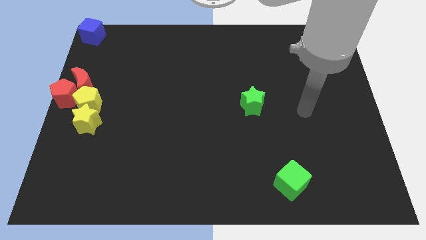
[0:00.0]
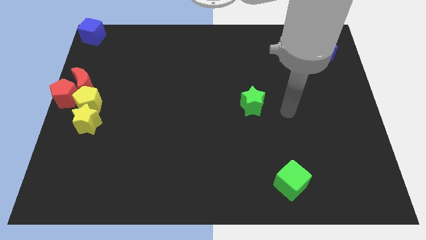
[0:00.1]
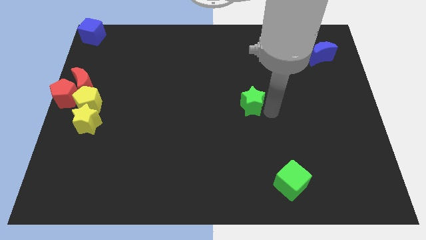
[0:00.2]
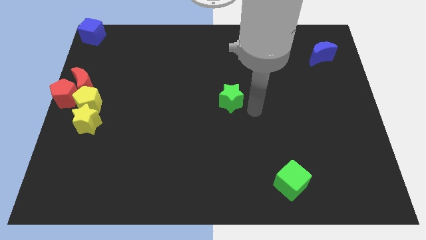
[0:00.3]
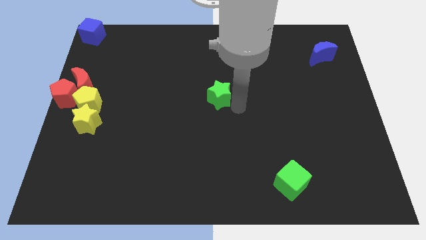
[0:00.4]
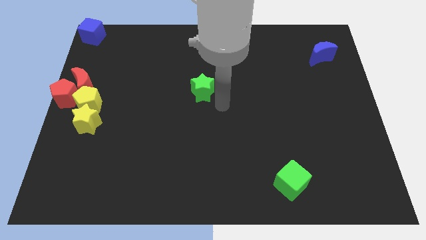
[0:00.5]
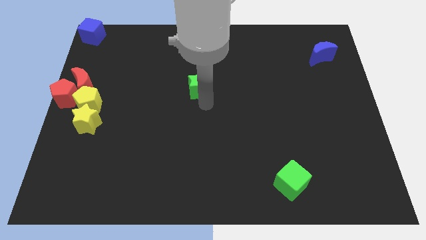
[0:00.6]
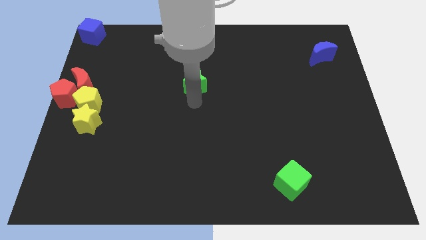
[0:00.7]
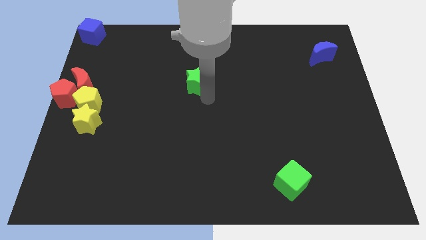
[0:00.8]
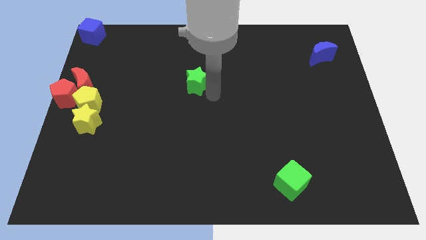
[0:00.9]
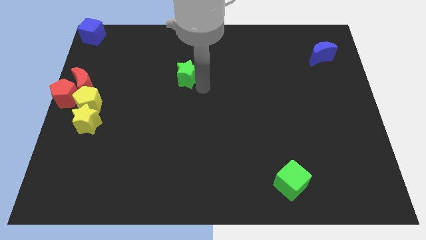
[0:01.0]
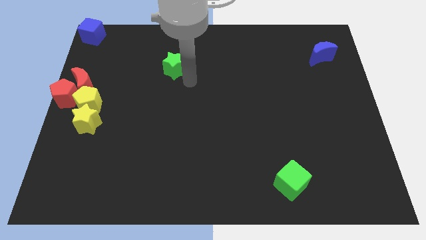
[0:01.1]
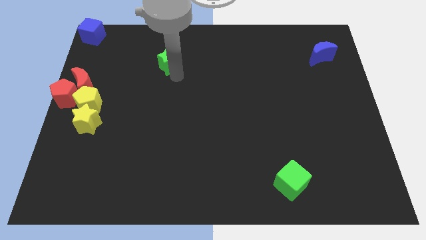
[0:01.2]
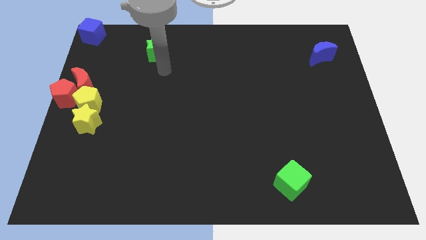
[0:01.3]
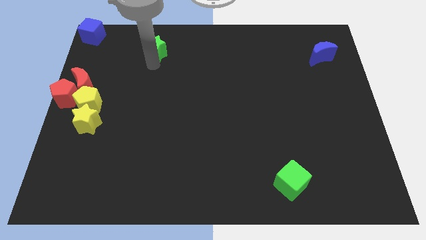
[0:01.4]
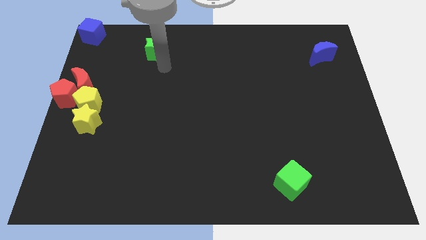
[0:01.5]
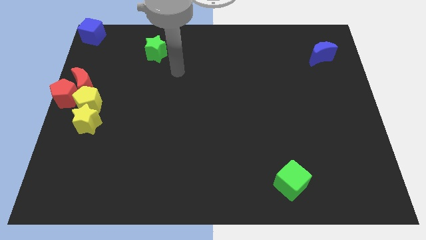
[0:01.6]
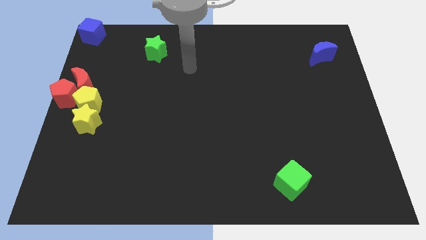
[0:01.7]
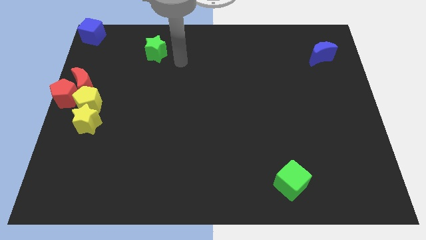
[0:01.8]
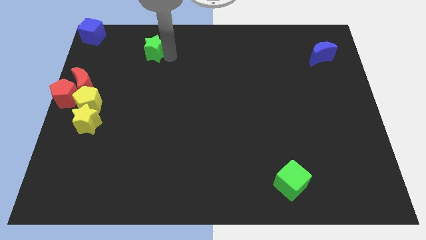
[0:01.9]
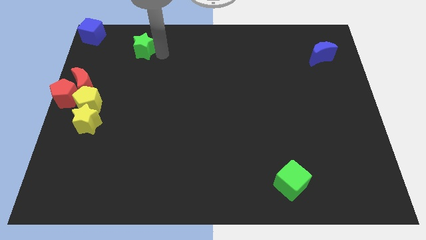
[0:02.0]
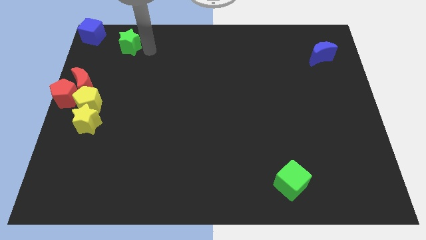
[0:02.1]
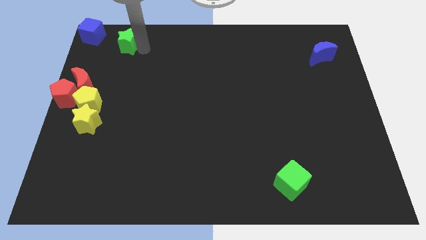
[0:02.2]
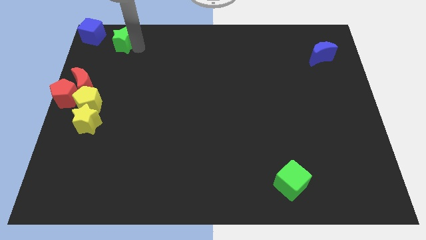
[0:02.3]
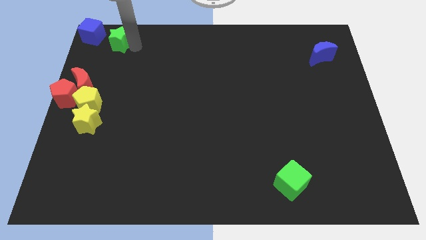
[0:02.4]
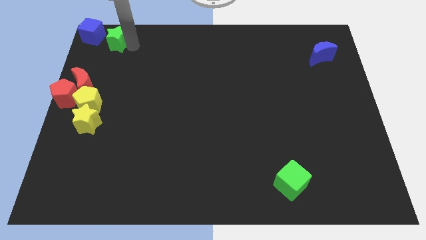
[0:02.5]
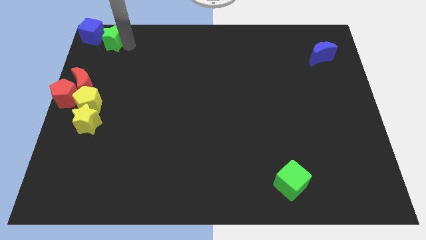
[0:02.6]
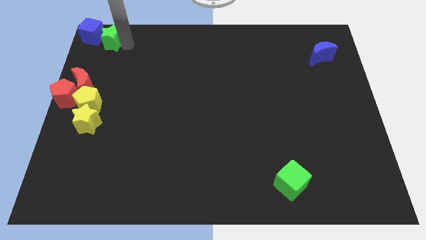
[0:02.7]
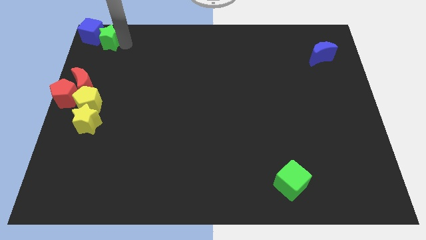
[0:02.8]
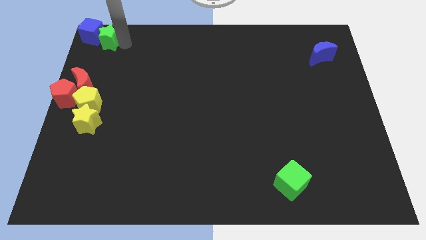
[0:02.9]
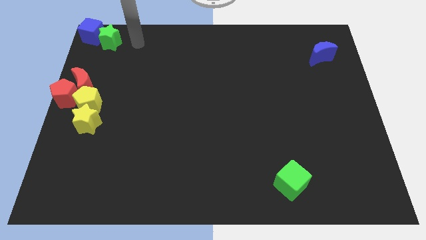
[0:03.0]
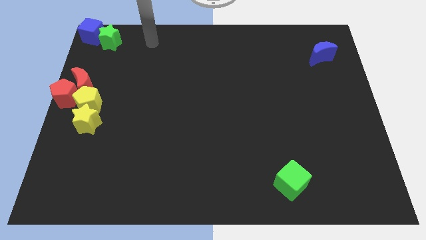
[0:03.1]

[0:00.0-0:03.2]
push the green star into the blue cube

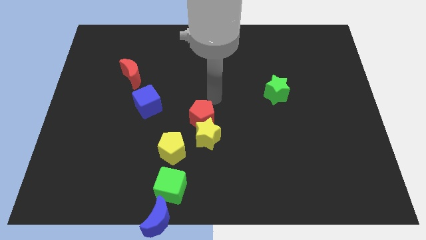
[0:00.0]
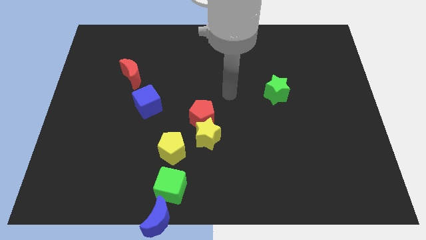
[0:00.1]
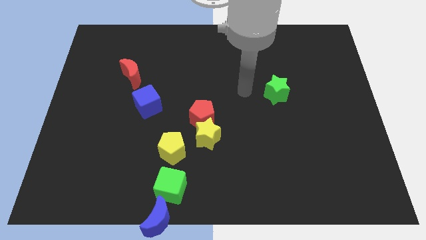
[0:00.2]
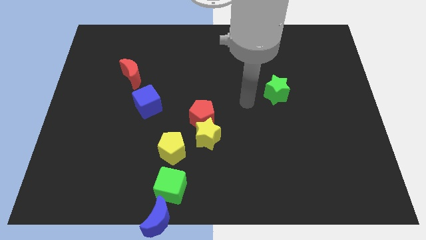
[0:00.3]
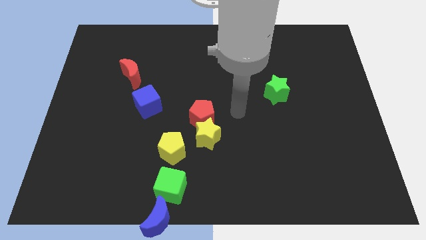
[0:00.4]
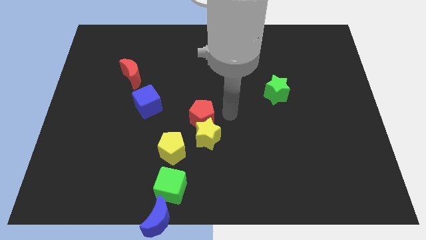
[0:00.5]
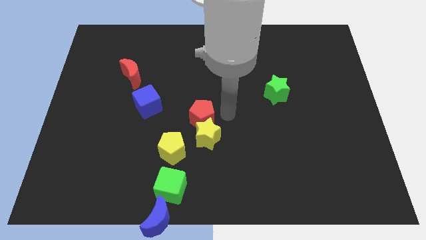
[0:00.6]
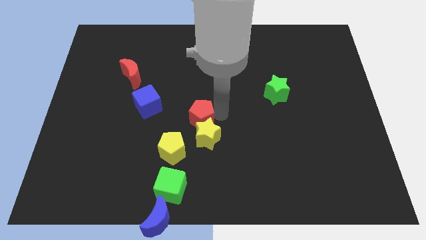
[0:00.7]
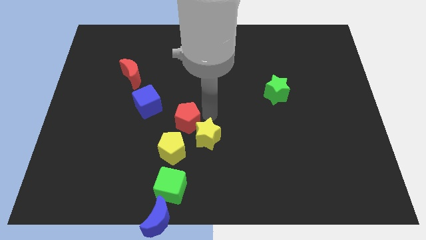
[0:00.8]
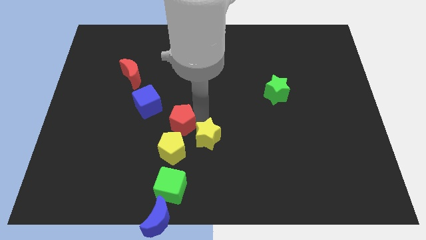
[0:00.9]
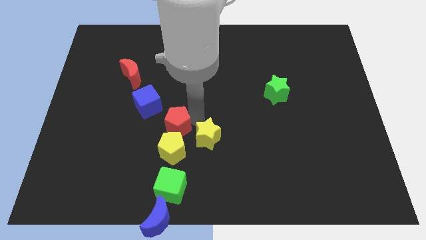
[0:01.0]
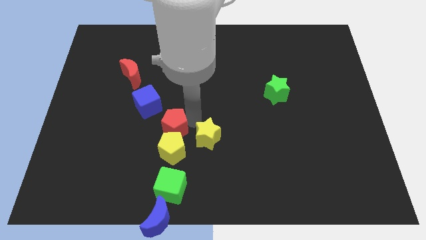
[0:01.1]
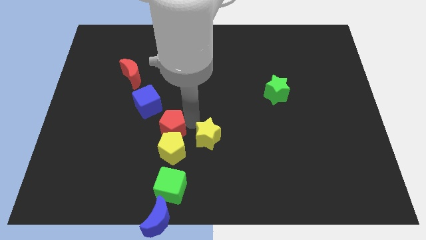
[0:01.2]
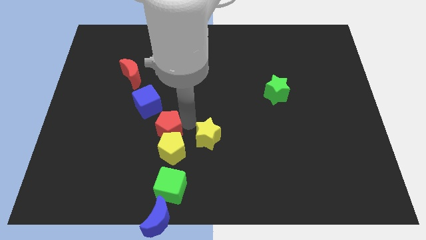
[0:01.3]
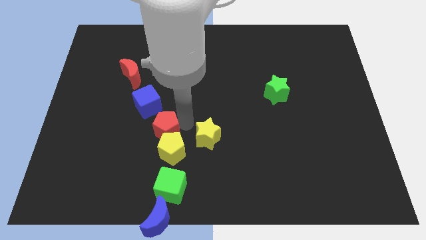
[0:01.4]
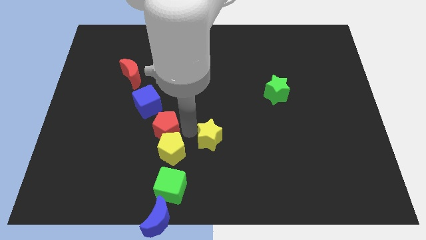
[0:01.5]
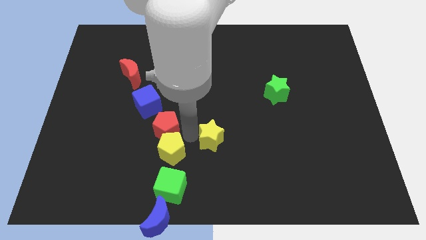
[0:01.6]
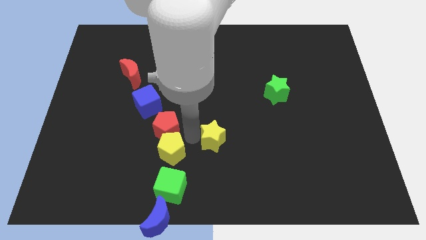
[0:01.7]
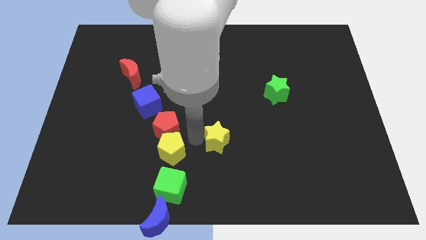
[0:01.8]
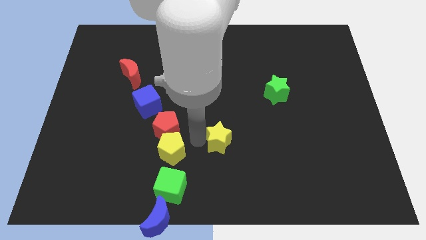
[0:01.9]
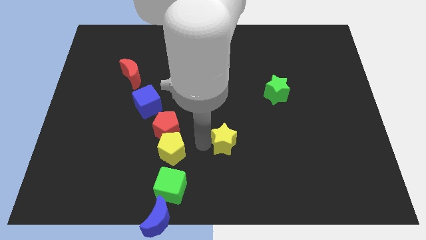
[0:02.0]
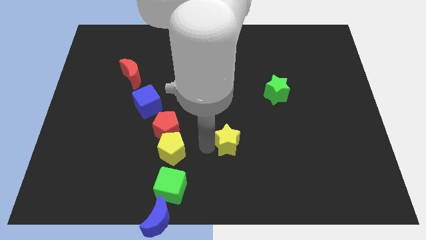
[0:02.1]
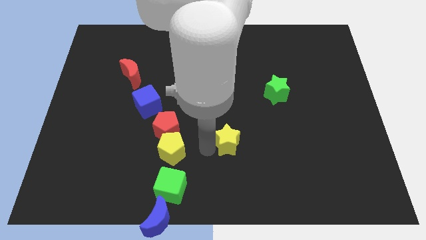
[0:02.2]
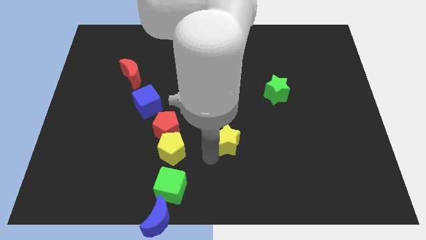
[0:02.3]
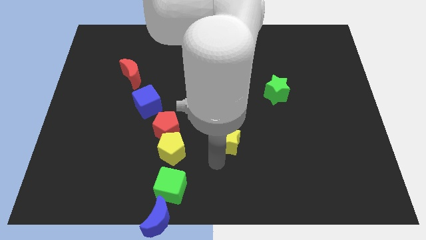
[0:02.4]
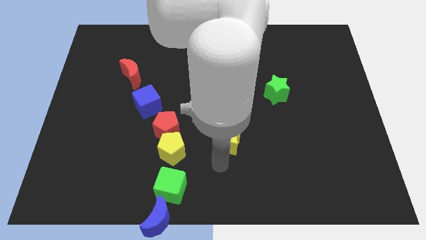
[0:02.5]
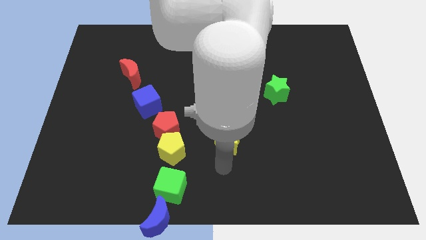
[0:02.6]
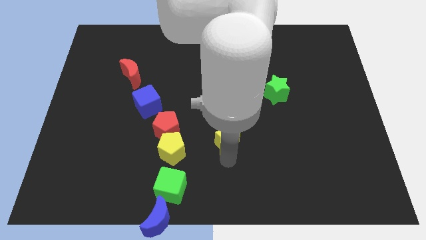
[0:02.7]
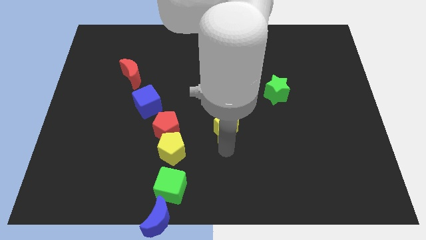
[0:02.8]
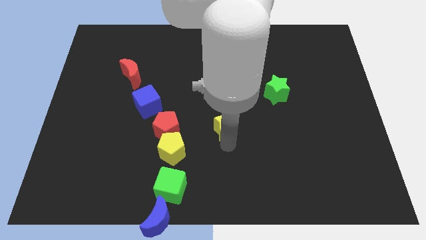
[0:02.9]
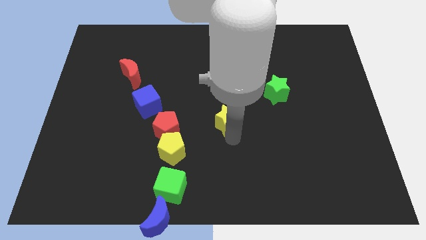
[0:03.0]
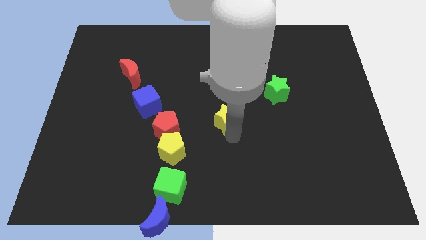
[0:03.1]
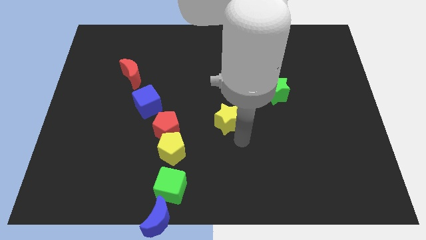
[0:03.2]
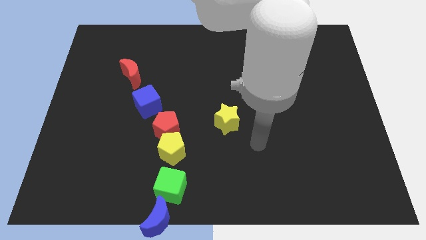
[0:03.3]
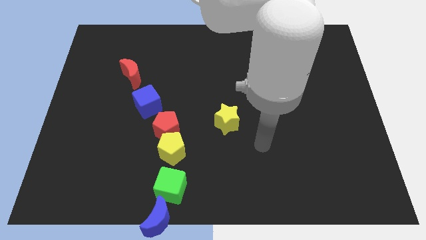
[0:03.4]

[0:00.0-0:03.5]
place the red pentagon above the yellow pentagon

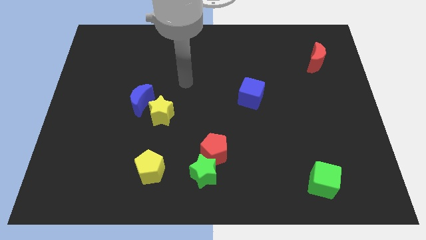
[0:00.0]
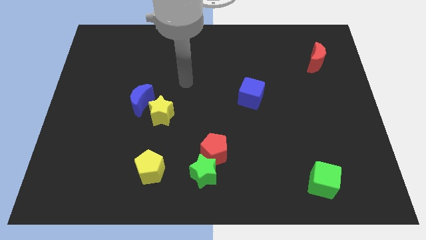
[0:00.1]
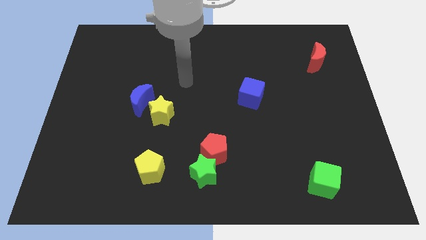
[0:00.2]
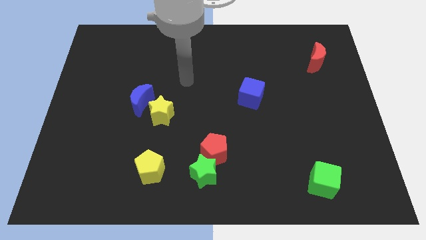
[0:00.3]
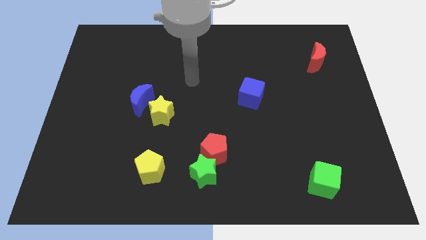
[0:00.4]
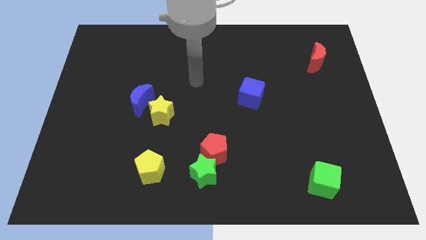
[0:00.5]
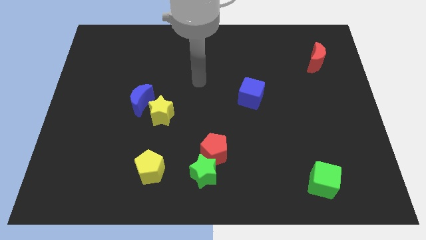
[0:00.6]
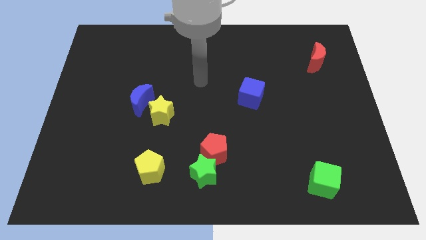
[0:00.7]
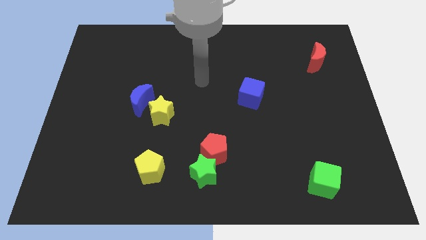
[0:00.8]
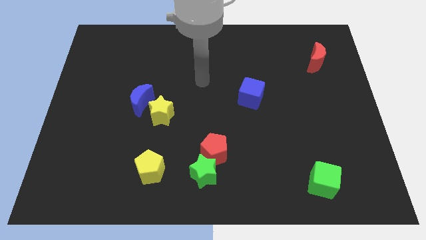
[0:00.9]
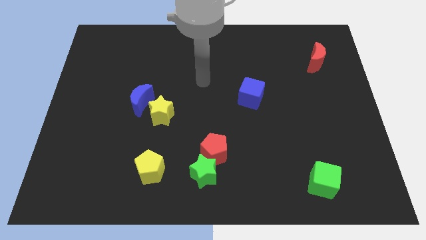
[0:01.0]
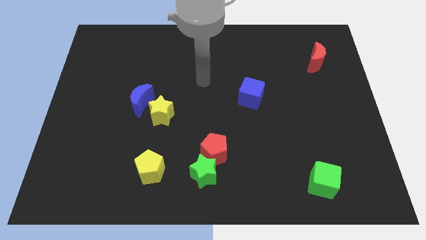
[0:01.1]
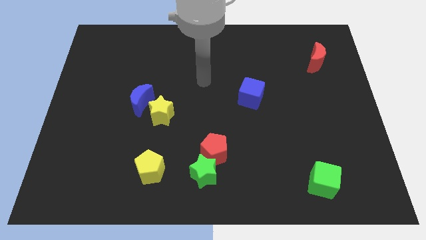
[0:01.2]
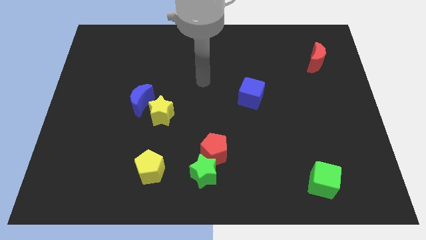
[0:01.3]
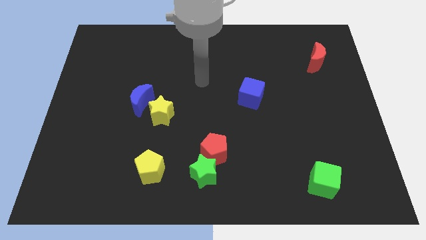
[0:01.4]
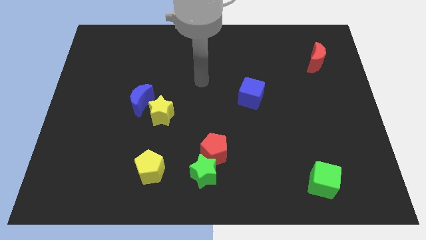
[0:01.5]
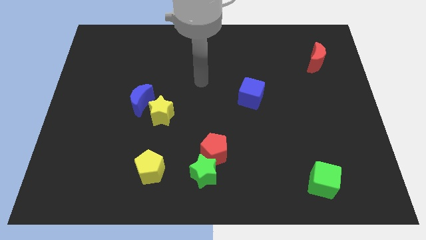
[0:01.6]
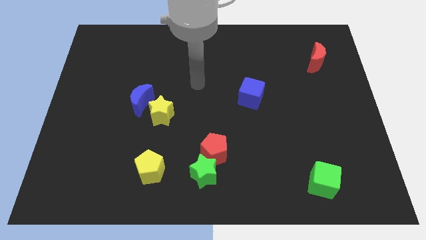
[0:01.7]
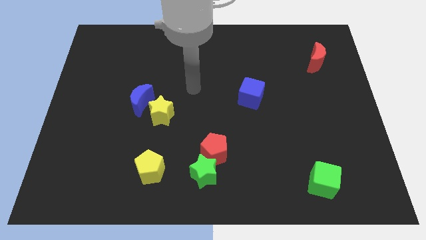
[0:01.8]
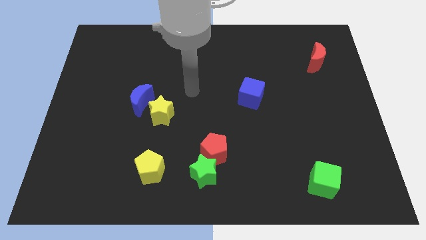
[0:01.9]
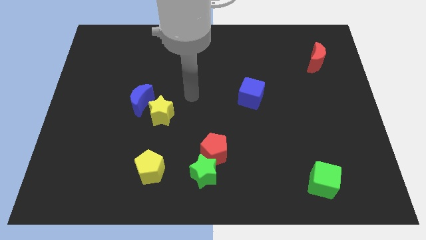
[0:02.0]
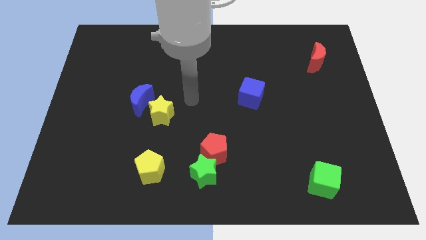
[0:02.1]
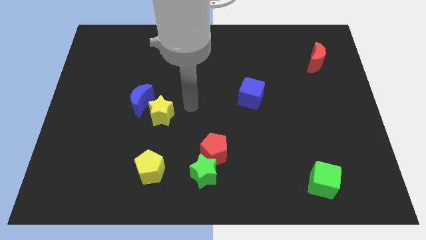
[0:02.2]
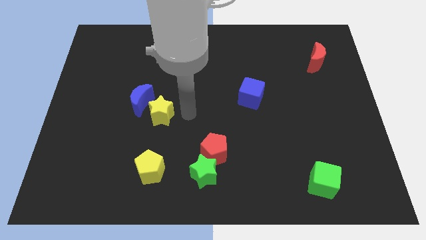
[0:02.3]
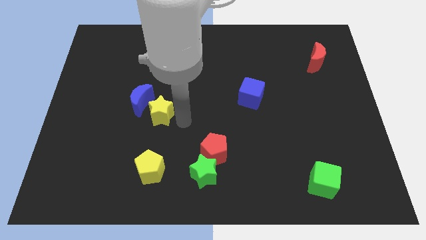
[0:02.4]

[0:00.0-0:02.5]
move your arm to the center of the board
